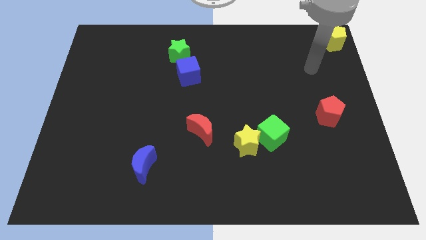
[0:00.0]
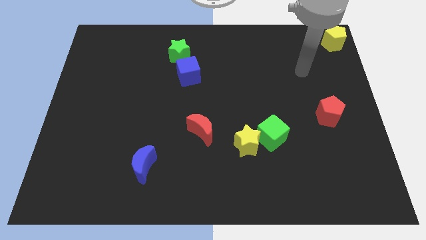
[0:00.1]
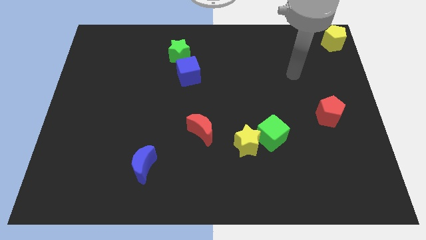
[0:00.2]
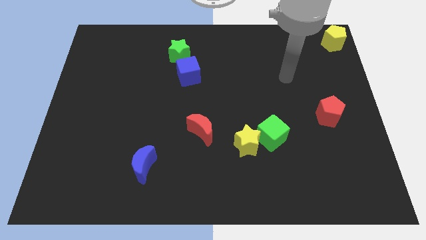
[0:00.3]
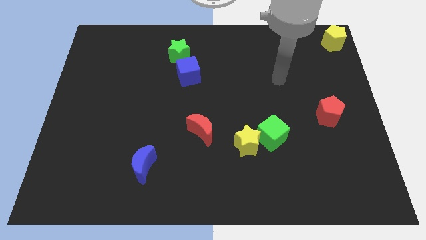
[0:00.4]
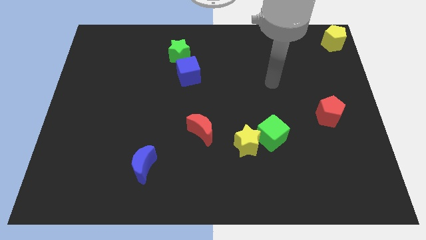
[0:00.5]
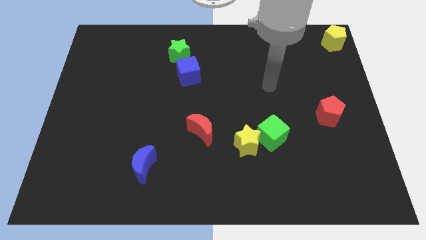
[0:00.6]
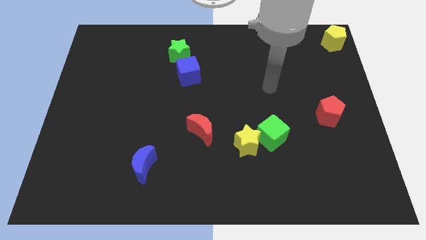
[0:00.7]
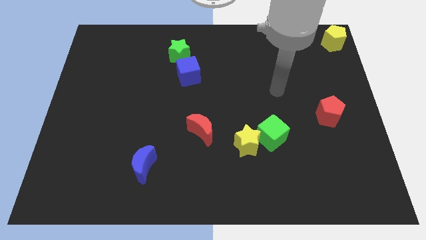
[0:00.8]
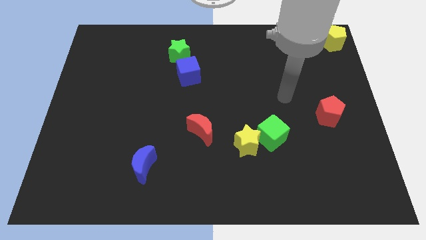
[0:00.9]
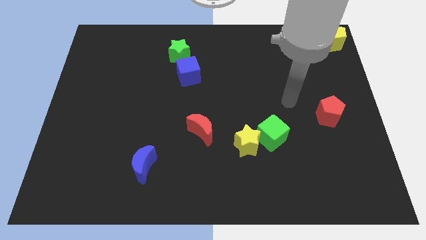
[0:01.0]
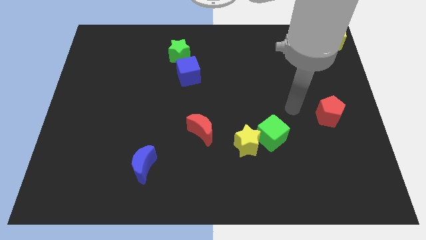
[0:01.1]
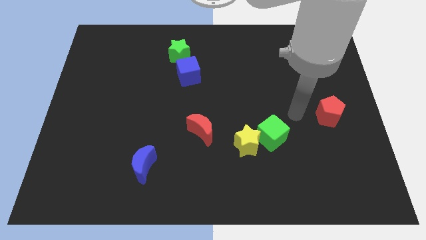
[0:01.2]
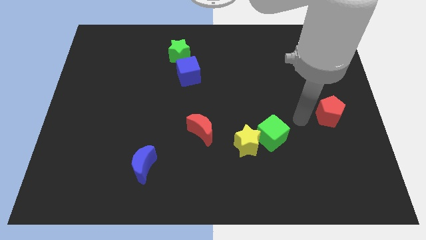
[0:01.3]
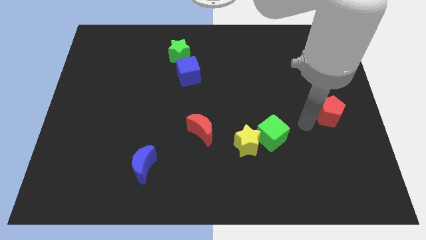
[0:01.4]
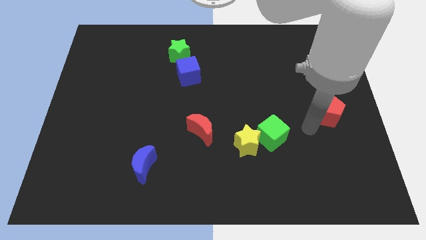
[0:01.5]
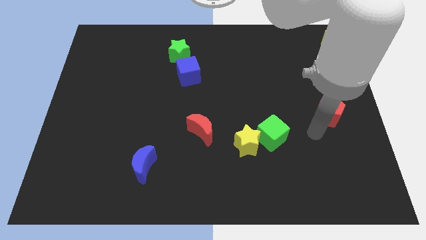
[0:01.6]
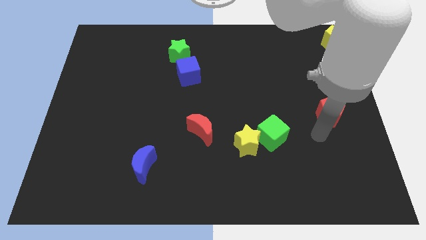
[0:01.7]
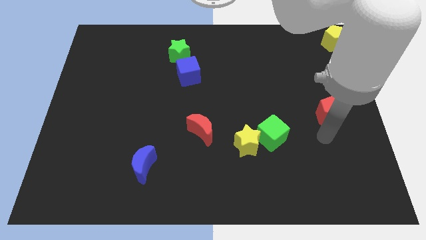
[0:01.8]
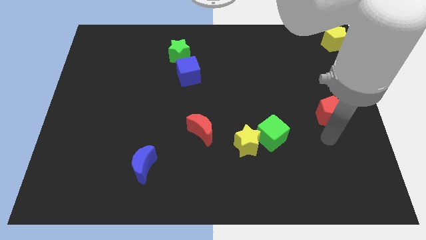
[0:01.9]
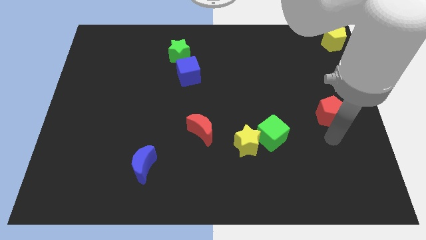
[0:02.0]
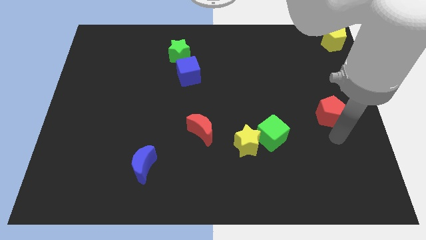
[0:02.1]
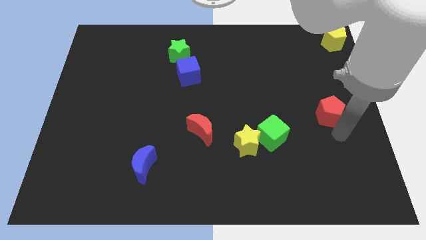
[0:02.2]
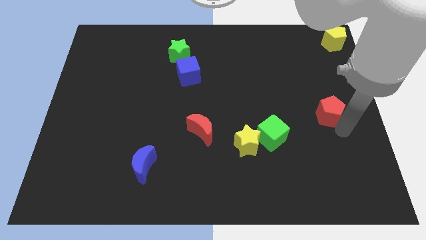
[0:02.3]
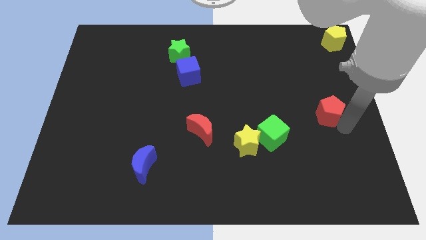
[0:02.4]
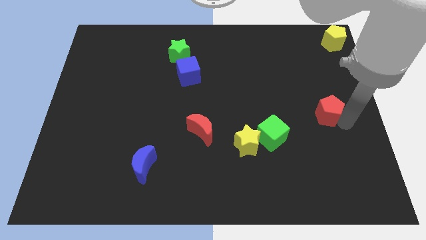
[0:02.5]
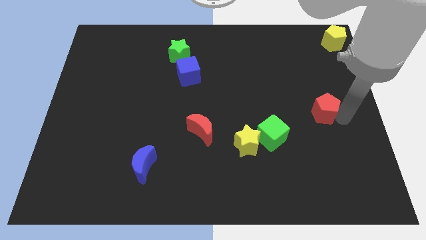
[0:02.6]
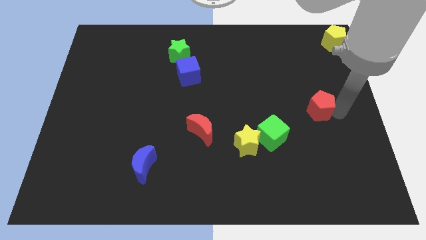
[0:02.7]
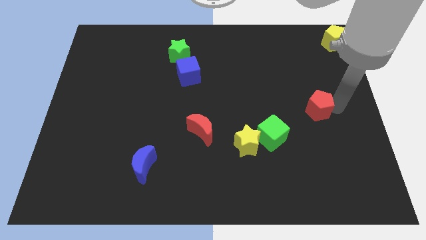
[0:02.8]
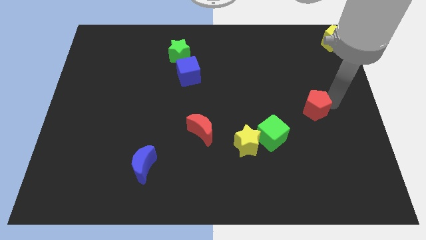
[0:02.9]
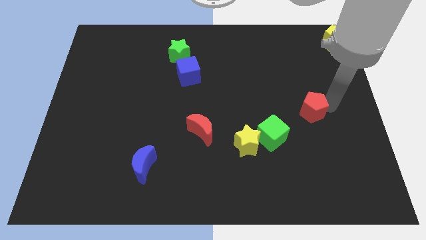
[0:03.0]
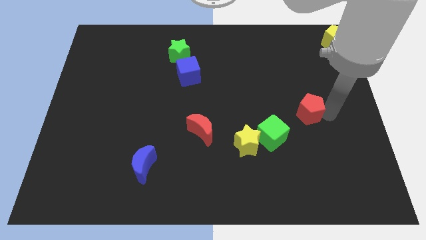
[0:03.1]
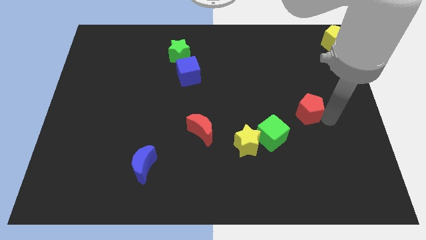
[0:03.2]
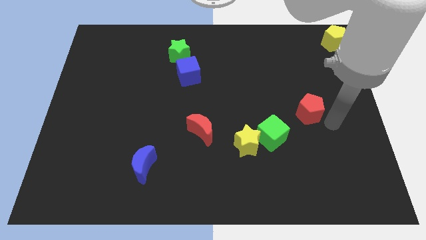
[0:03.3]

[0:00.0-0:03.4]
push the red pentagon diagnol to the green cube

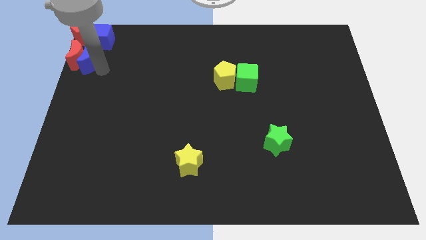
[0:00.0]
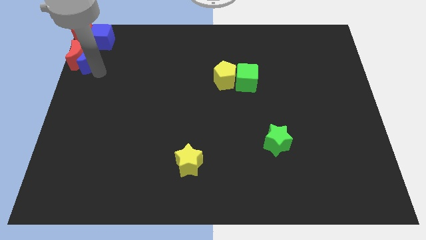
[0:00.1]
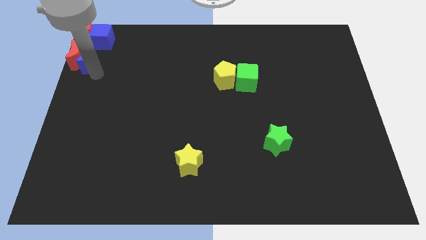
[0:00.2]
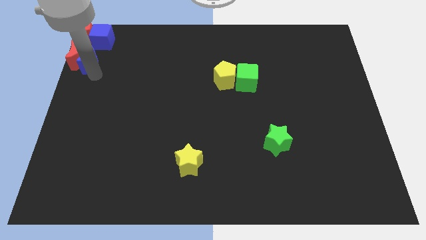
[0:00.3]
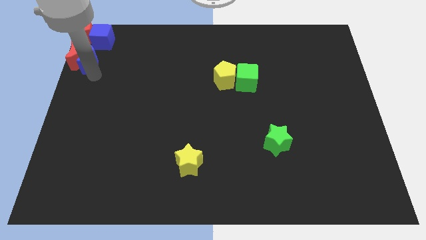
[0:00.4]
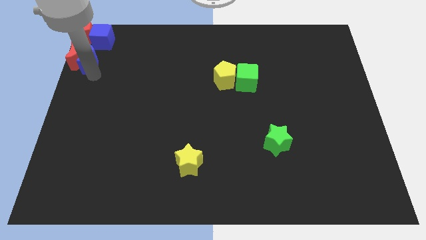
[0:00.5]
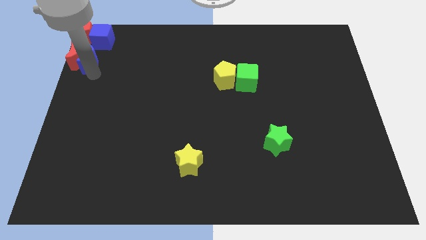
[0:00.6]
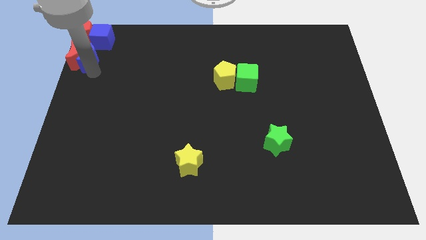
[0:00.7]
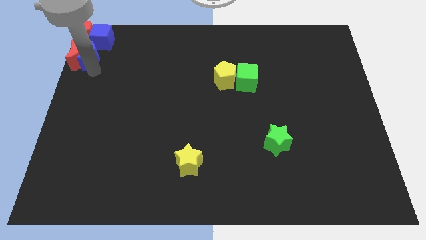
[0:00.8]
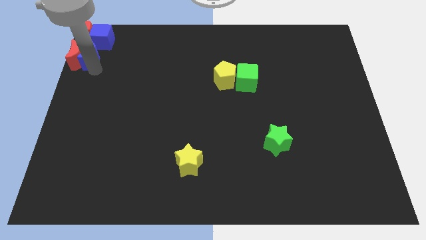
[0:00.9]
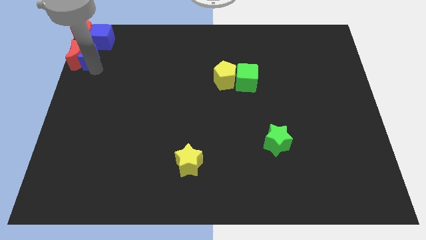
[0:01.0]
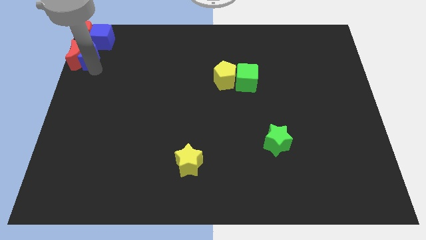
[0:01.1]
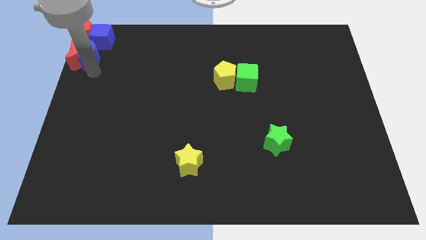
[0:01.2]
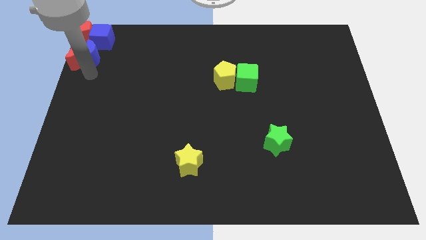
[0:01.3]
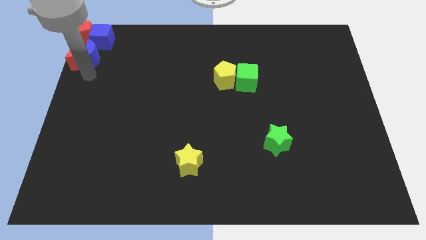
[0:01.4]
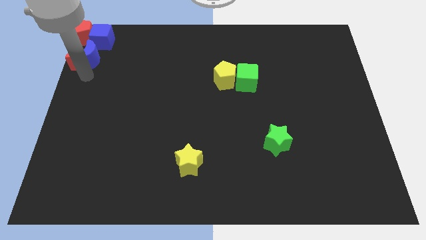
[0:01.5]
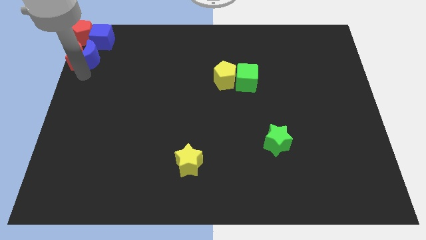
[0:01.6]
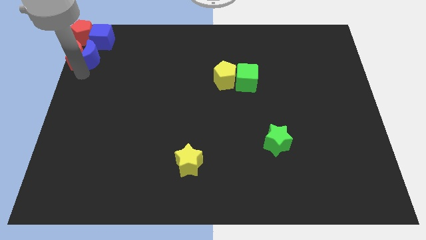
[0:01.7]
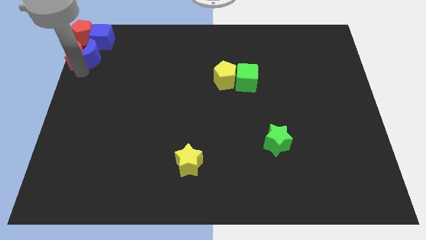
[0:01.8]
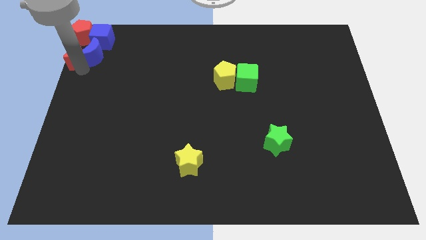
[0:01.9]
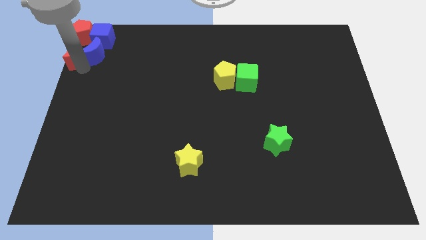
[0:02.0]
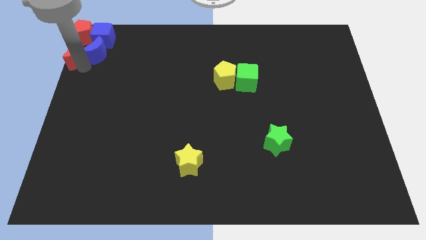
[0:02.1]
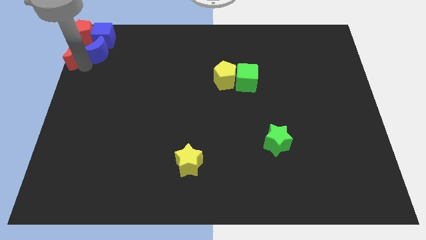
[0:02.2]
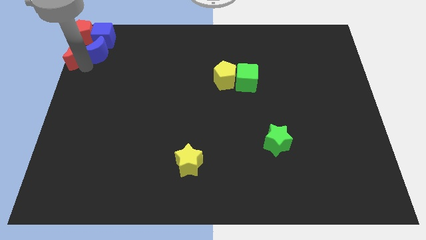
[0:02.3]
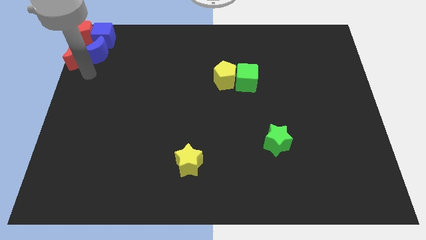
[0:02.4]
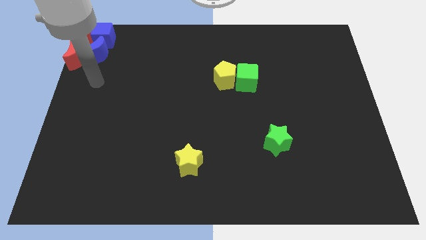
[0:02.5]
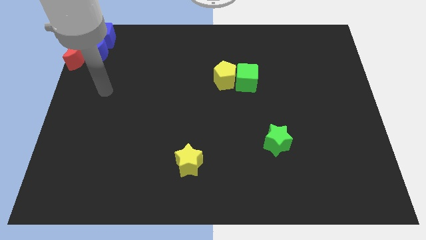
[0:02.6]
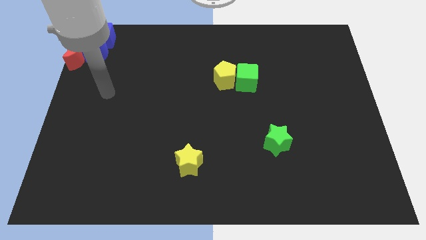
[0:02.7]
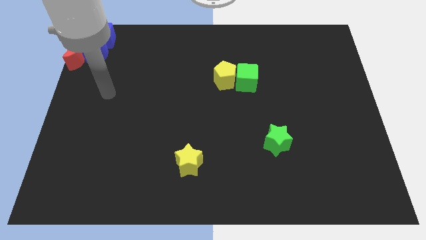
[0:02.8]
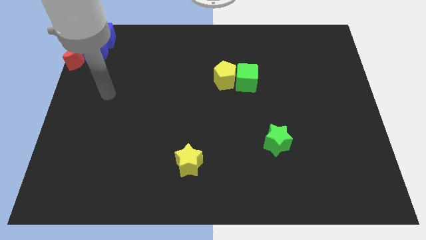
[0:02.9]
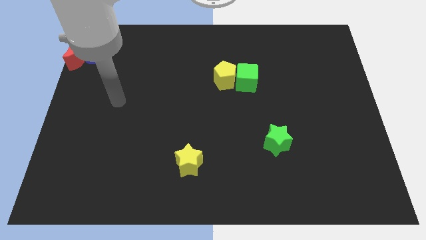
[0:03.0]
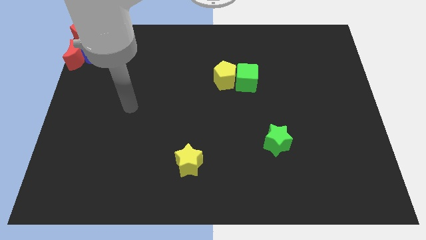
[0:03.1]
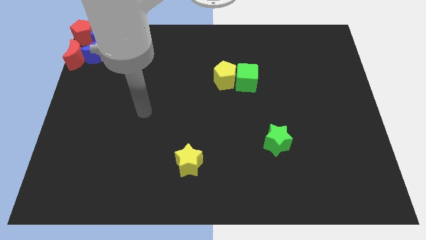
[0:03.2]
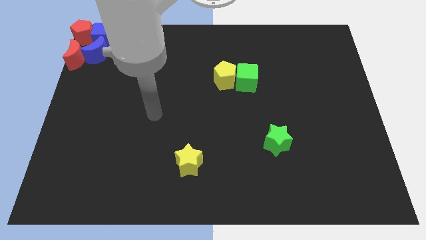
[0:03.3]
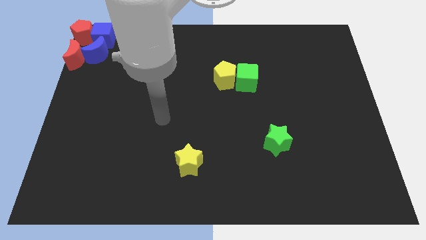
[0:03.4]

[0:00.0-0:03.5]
push the blue crescent into the bottom side of the blue cube

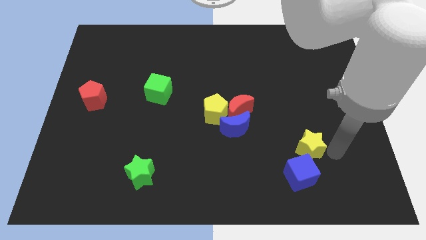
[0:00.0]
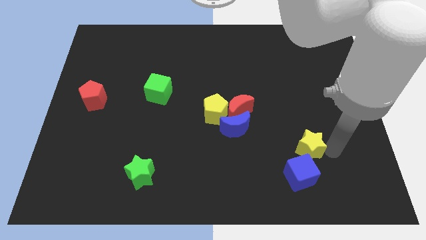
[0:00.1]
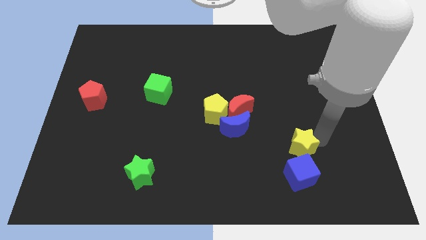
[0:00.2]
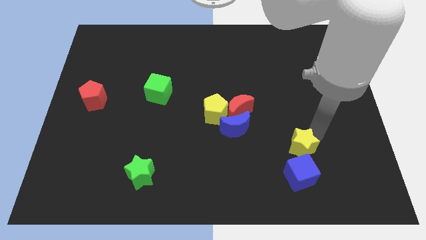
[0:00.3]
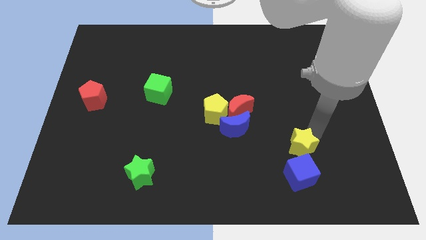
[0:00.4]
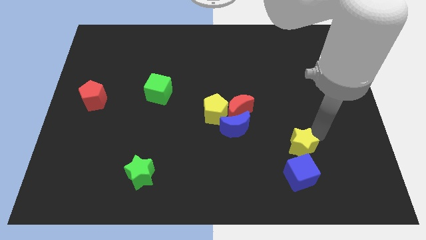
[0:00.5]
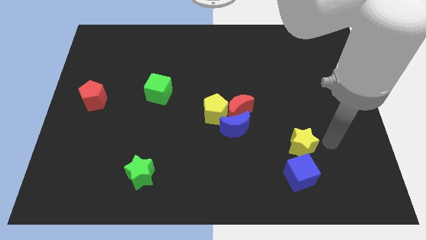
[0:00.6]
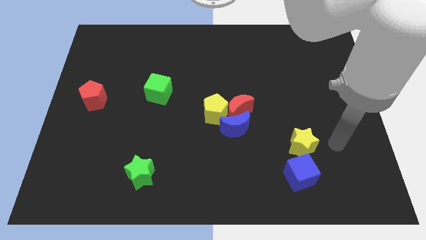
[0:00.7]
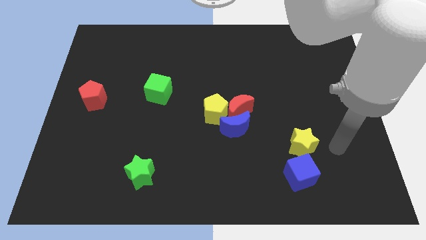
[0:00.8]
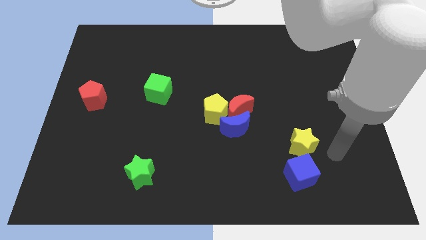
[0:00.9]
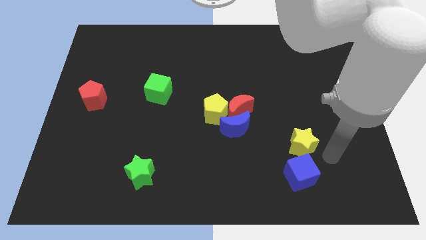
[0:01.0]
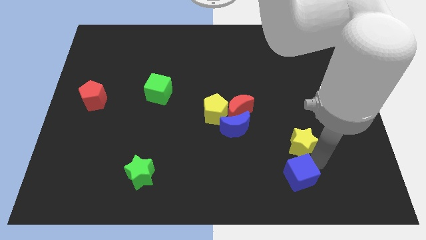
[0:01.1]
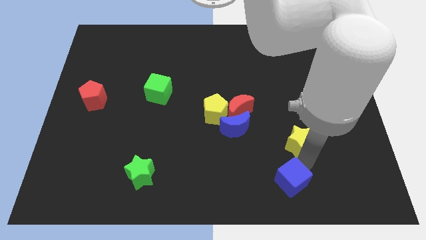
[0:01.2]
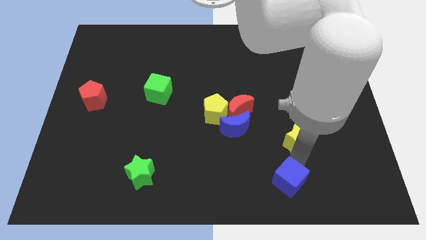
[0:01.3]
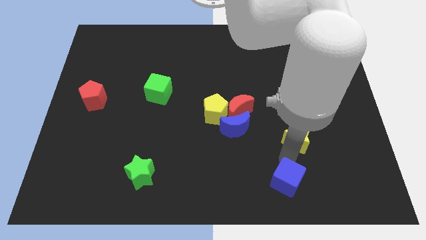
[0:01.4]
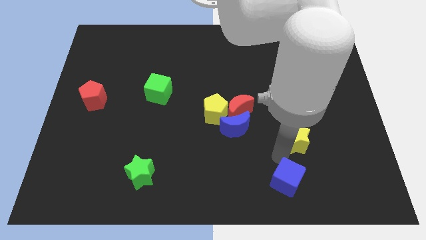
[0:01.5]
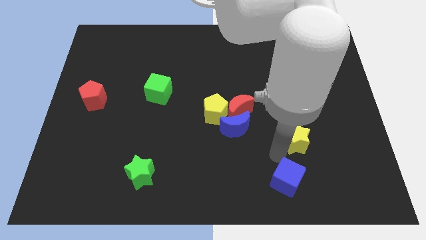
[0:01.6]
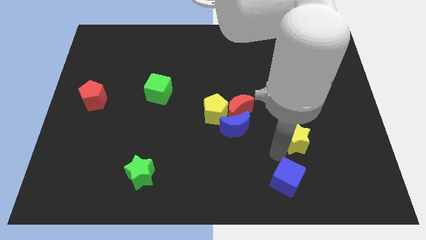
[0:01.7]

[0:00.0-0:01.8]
separate the yellow star and the blue cube

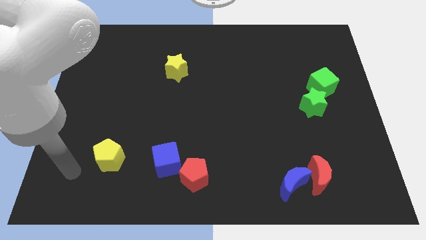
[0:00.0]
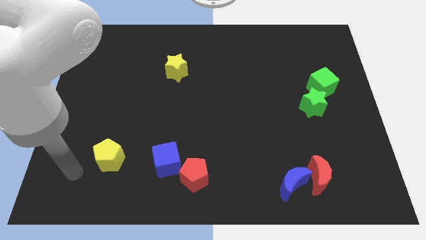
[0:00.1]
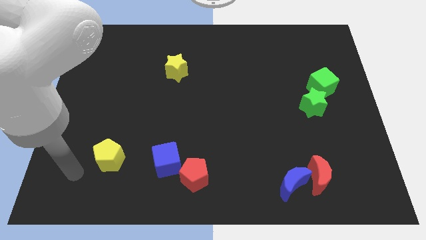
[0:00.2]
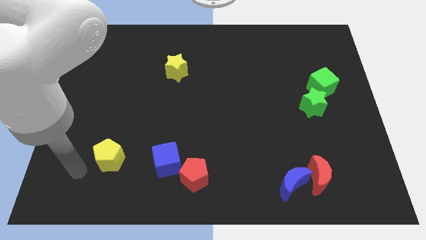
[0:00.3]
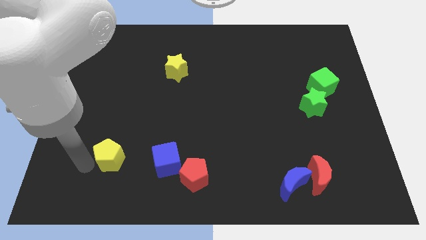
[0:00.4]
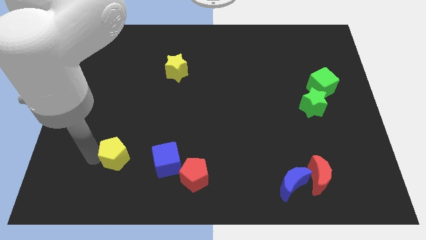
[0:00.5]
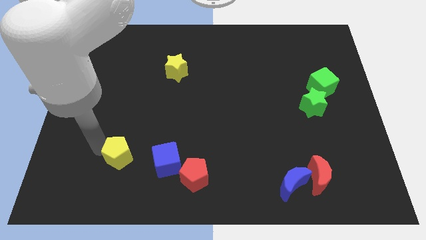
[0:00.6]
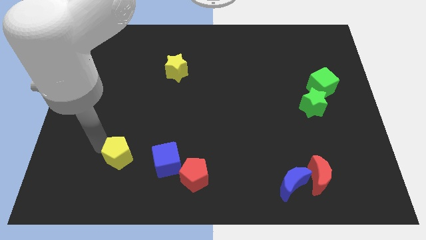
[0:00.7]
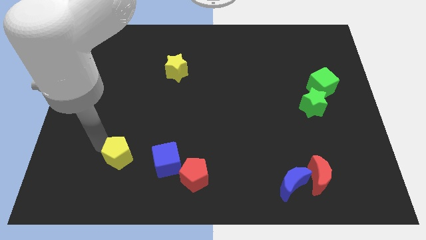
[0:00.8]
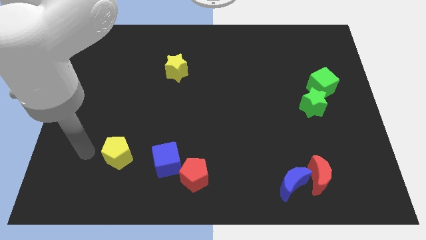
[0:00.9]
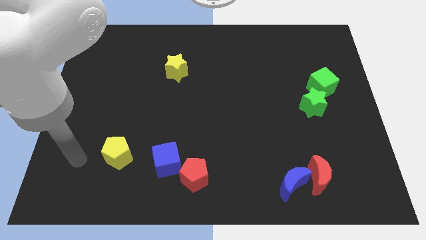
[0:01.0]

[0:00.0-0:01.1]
slightly push the yellow pentagon to the right of the board
